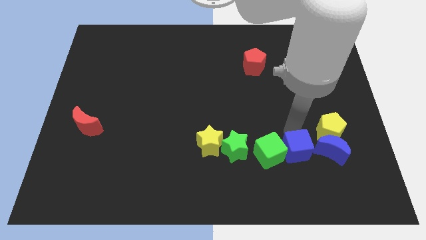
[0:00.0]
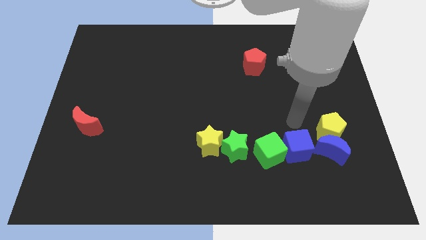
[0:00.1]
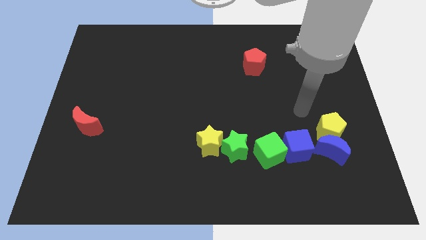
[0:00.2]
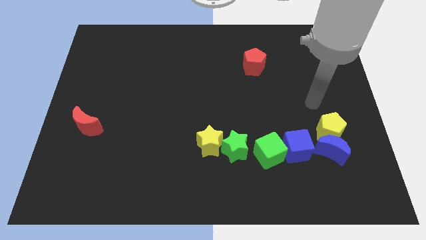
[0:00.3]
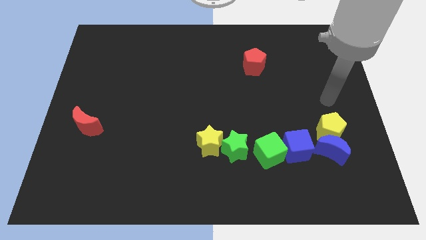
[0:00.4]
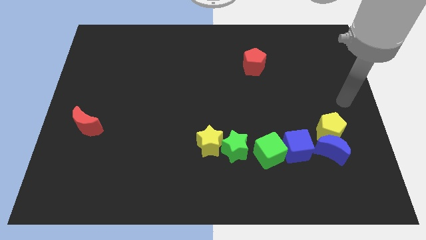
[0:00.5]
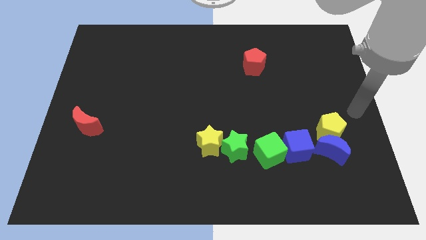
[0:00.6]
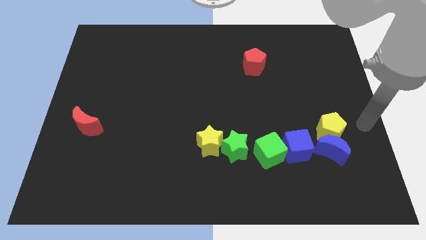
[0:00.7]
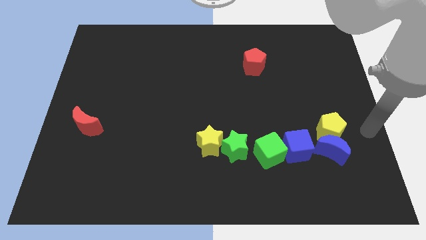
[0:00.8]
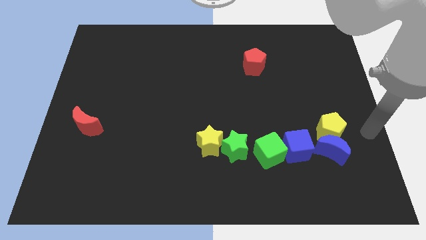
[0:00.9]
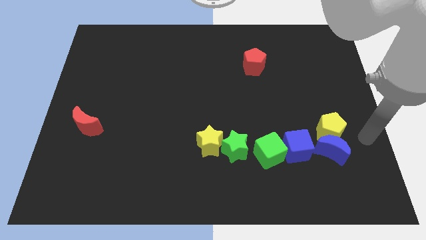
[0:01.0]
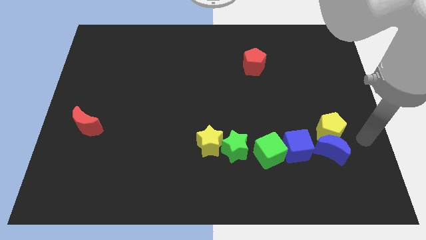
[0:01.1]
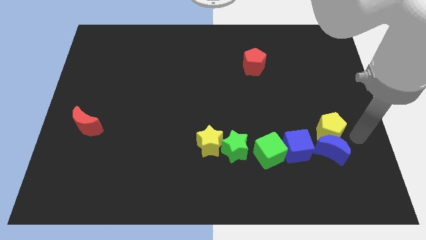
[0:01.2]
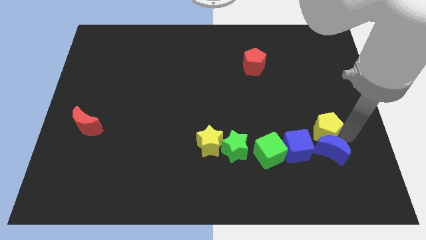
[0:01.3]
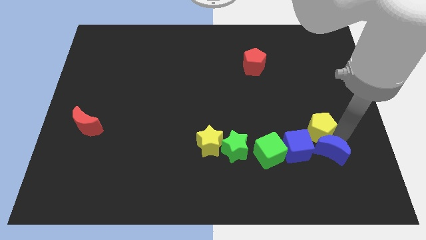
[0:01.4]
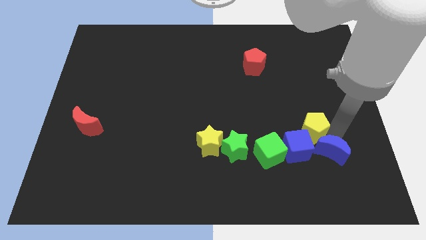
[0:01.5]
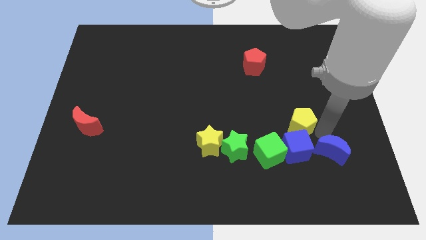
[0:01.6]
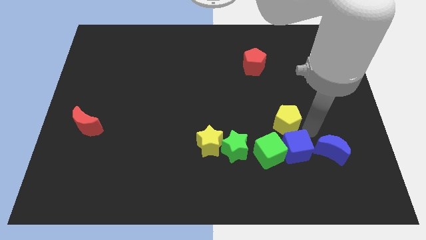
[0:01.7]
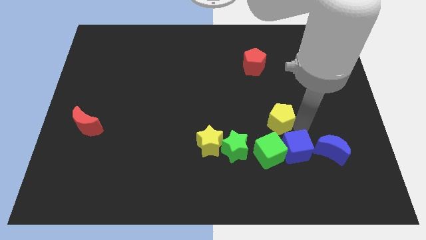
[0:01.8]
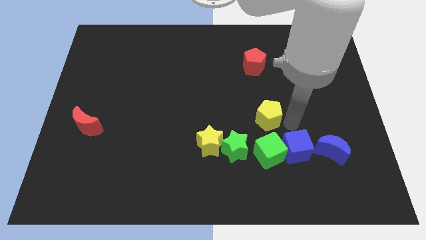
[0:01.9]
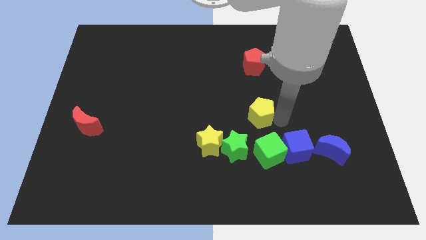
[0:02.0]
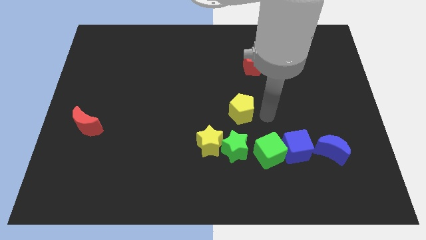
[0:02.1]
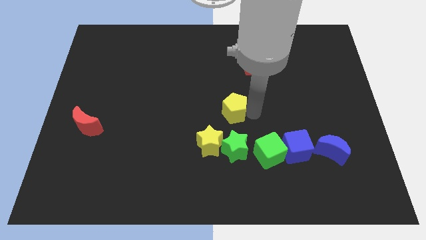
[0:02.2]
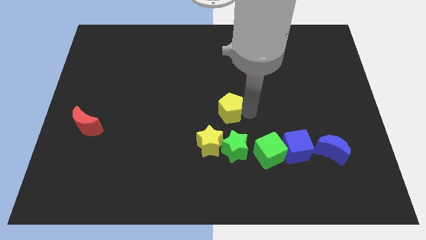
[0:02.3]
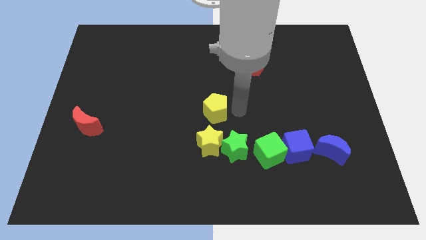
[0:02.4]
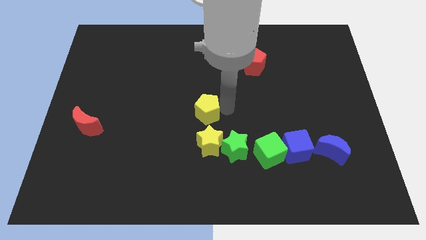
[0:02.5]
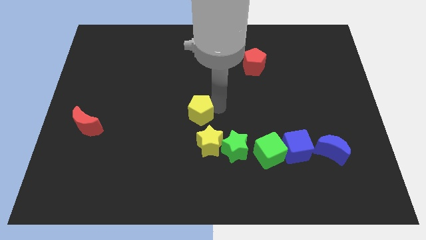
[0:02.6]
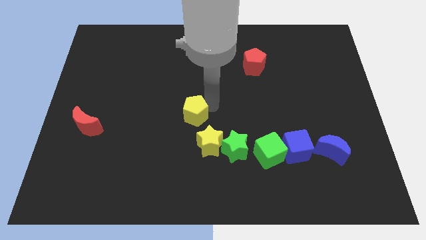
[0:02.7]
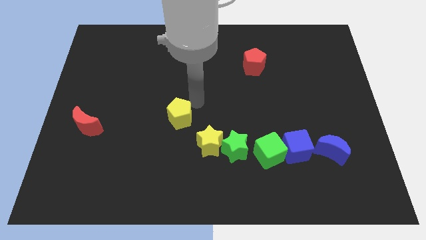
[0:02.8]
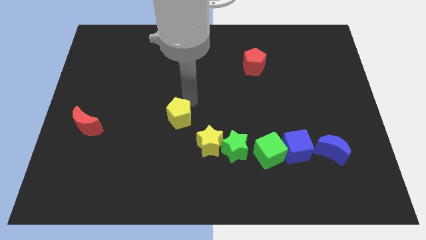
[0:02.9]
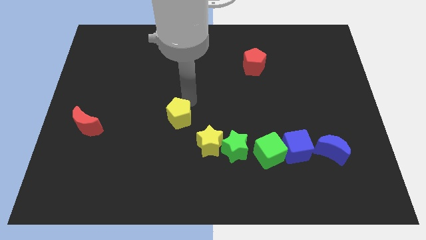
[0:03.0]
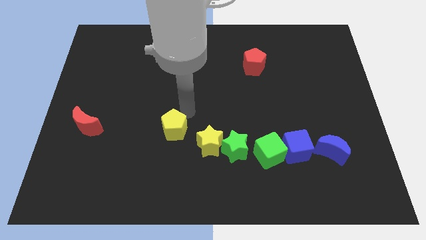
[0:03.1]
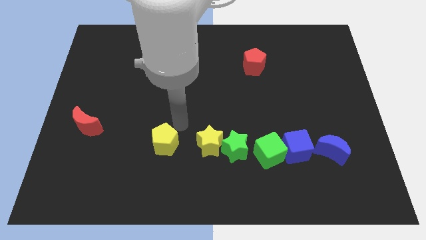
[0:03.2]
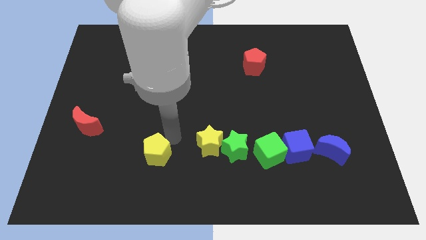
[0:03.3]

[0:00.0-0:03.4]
place the yellow pentagon parallel left to the yellow star

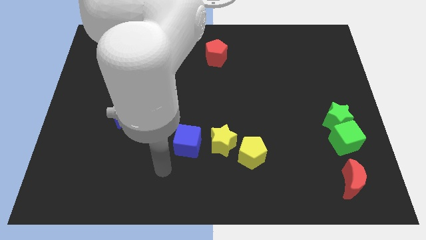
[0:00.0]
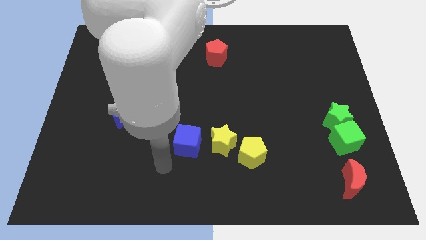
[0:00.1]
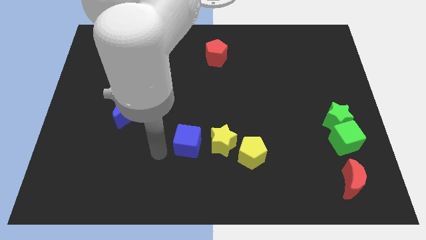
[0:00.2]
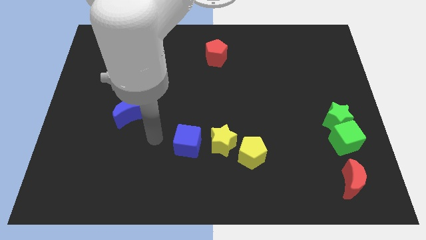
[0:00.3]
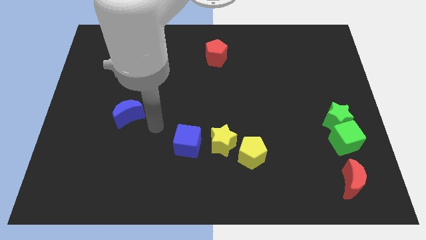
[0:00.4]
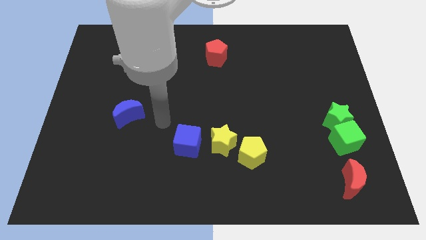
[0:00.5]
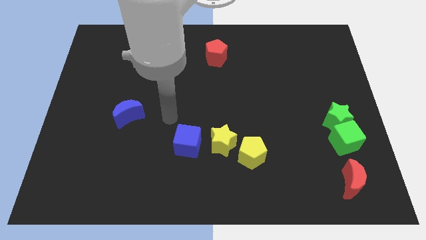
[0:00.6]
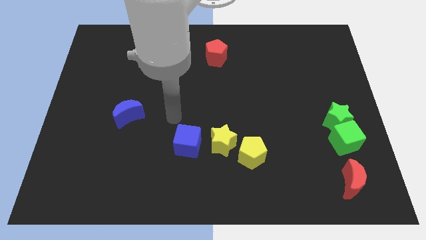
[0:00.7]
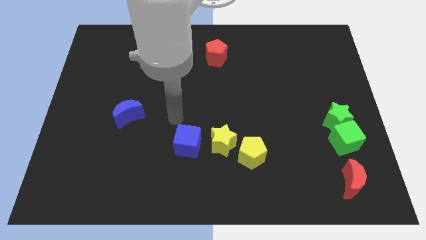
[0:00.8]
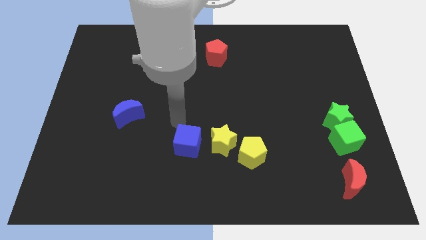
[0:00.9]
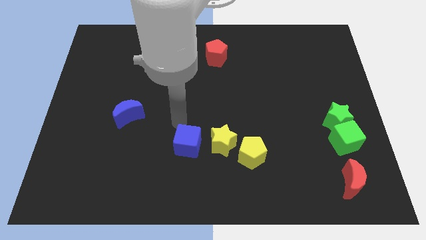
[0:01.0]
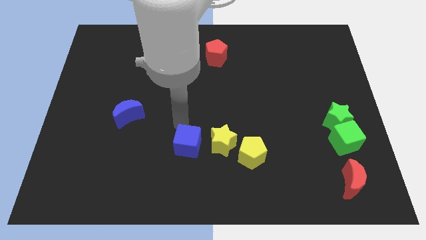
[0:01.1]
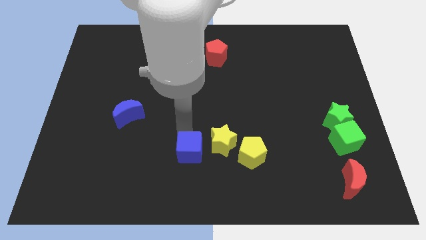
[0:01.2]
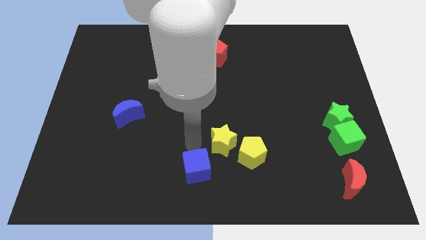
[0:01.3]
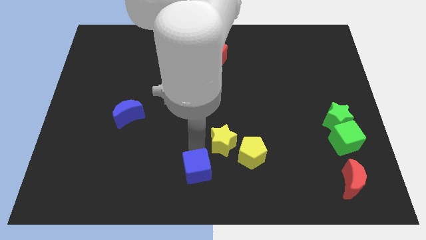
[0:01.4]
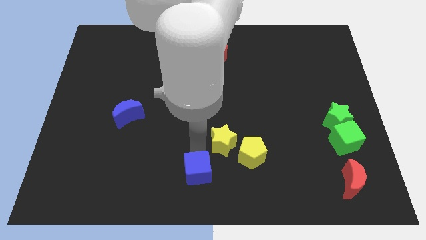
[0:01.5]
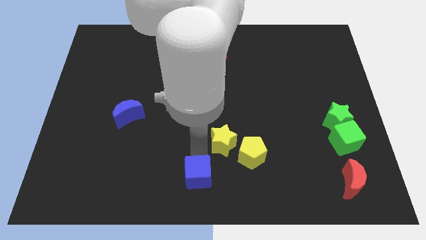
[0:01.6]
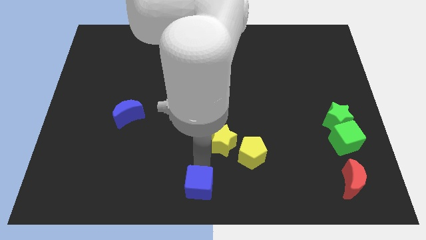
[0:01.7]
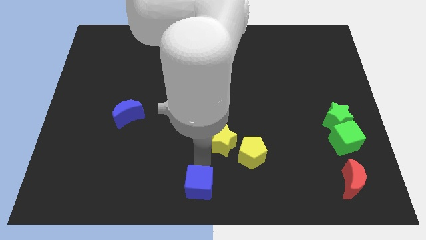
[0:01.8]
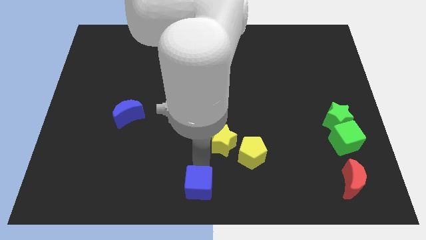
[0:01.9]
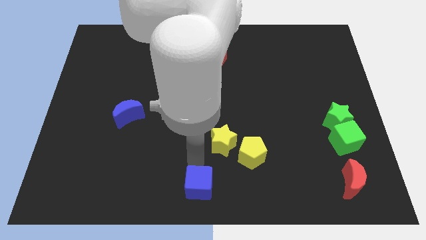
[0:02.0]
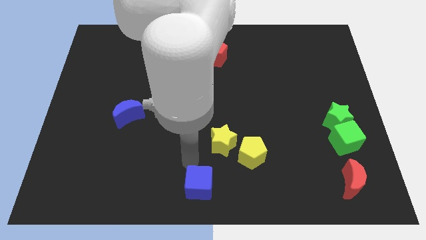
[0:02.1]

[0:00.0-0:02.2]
push the blue cube to the bottom side

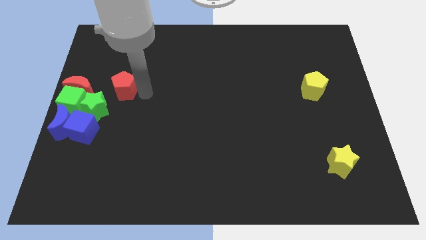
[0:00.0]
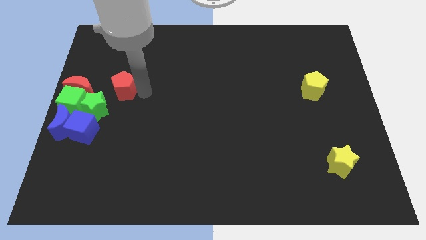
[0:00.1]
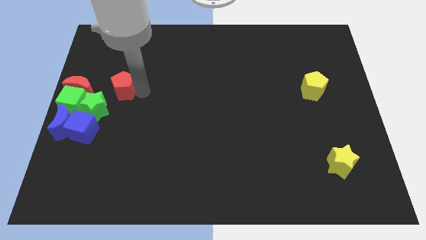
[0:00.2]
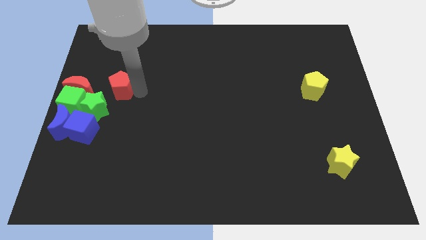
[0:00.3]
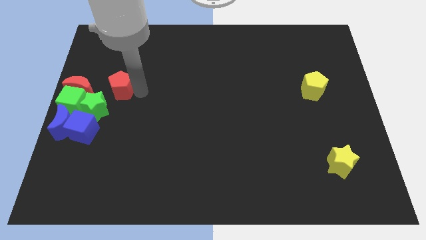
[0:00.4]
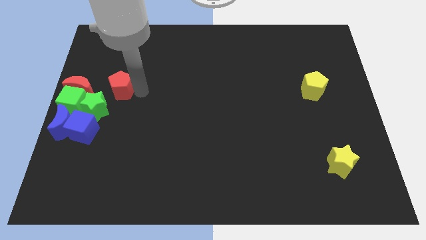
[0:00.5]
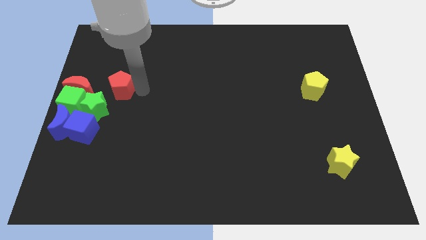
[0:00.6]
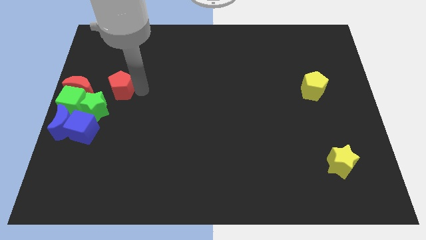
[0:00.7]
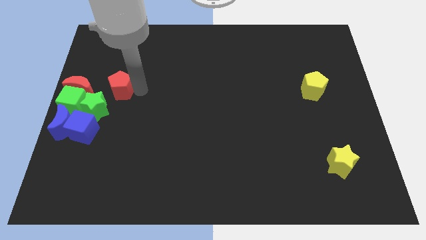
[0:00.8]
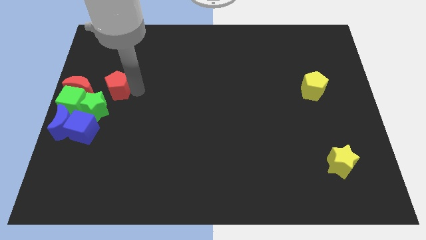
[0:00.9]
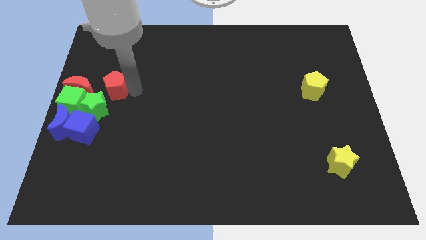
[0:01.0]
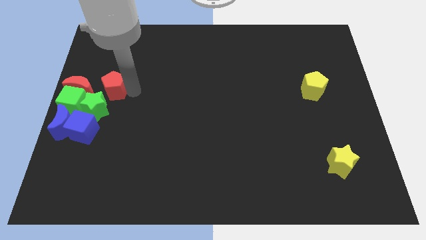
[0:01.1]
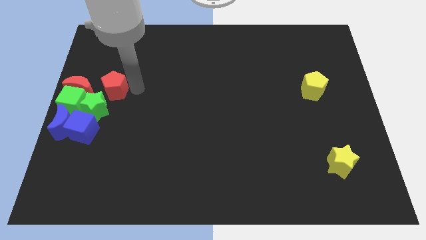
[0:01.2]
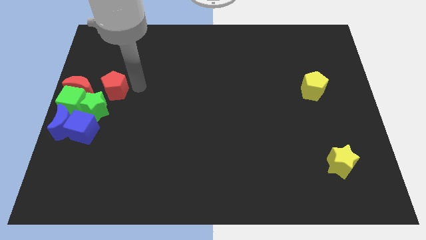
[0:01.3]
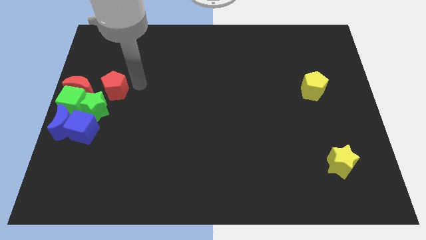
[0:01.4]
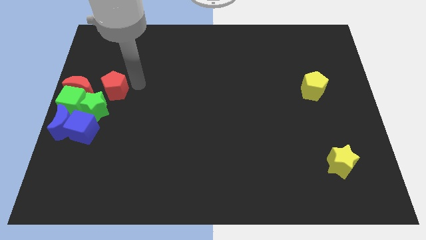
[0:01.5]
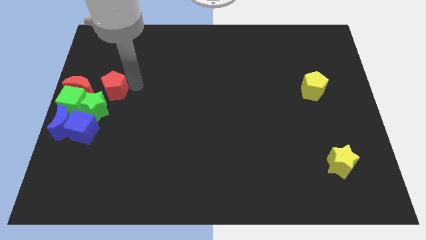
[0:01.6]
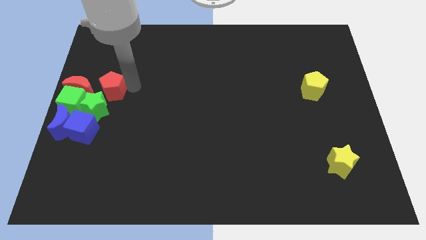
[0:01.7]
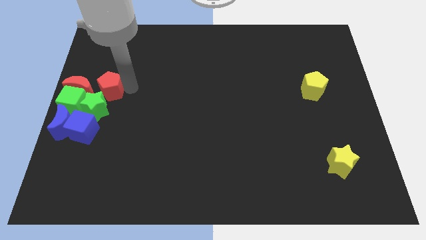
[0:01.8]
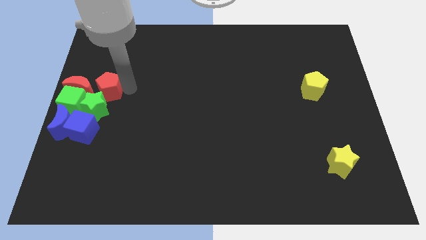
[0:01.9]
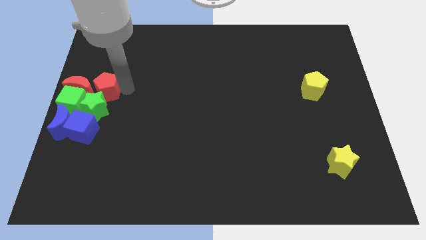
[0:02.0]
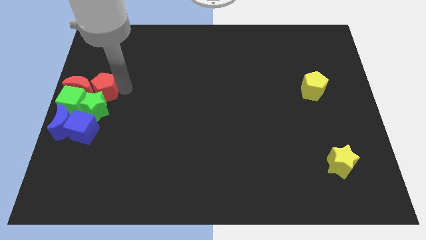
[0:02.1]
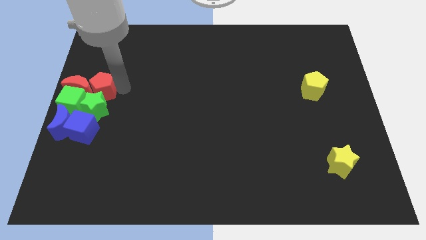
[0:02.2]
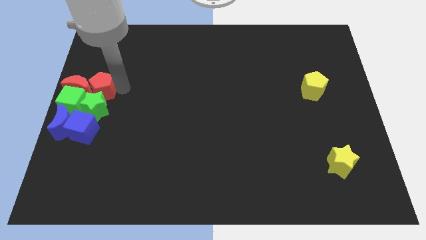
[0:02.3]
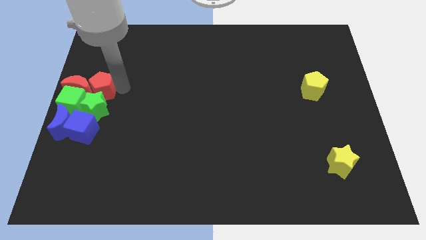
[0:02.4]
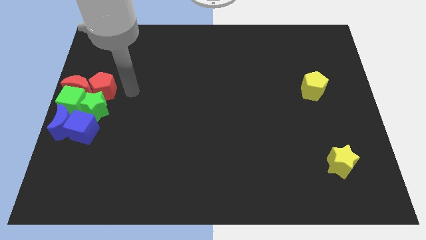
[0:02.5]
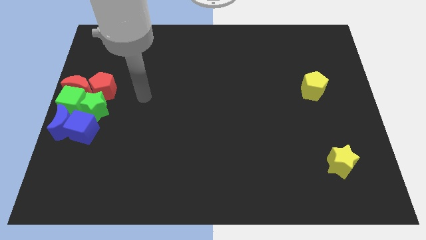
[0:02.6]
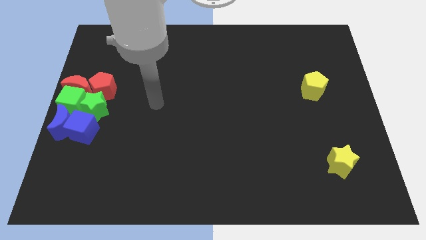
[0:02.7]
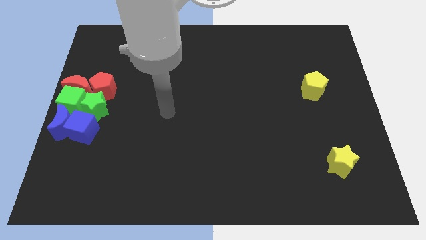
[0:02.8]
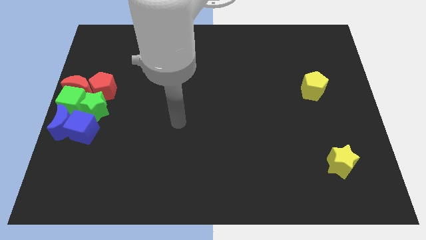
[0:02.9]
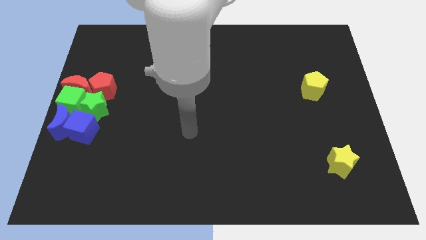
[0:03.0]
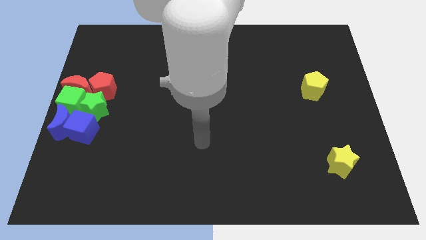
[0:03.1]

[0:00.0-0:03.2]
adjust the red pentagon to the right of the red moon

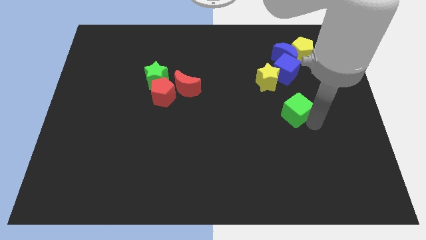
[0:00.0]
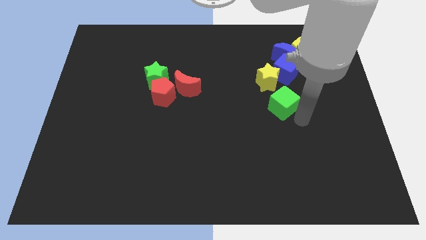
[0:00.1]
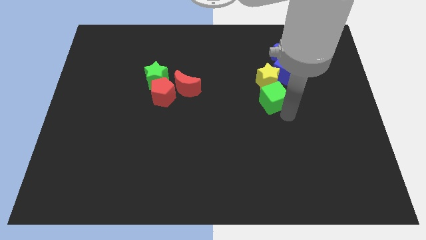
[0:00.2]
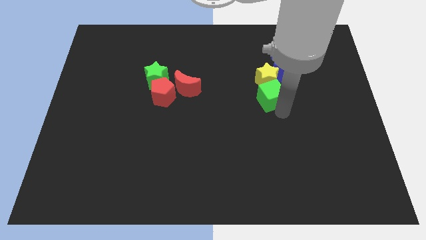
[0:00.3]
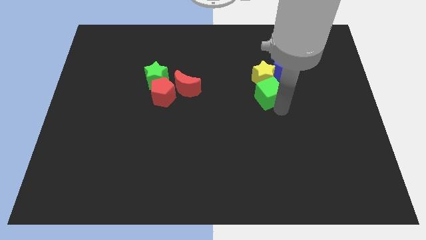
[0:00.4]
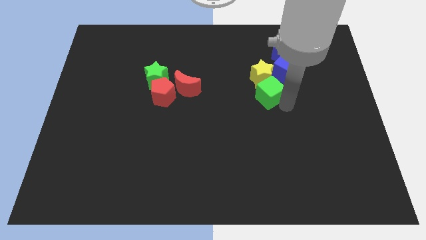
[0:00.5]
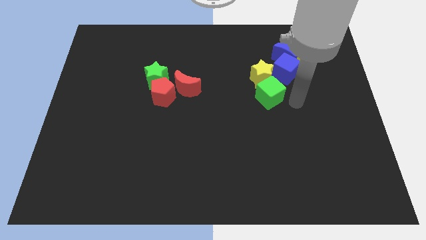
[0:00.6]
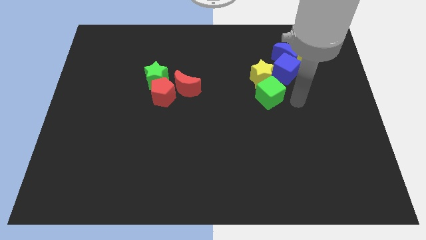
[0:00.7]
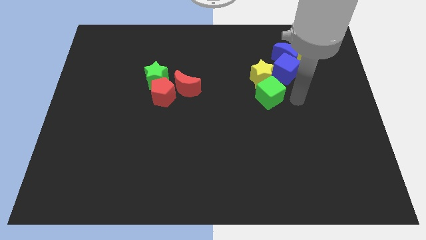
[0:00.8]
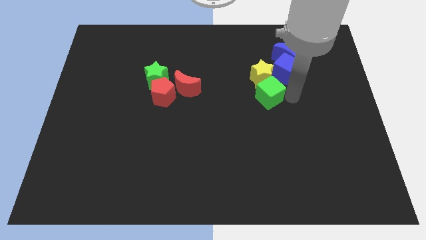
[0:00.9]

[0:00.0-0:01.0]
place the green cube below the yellow star
